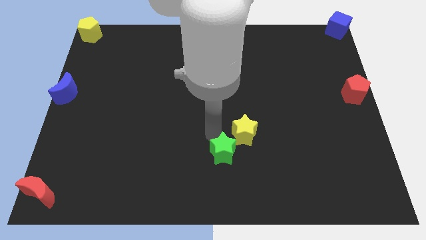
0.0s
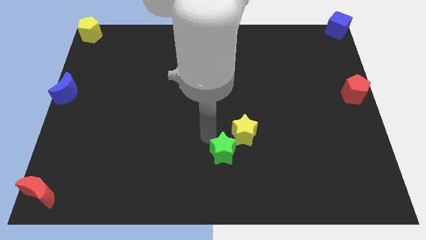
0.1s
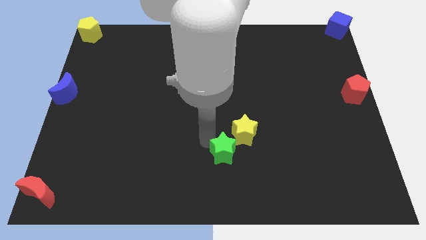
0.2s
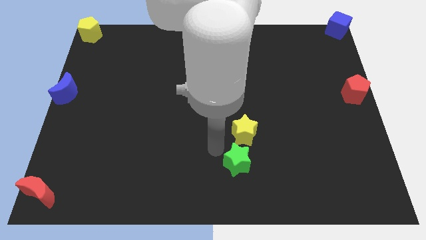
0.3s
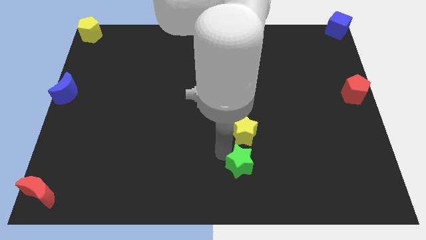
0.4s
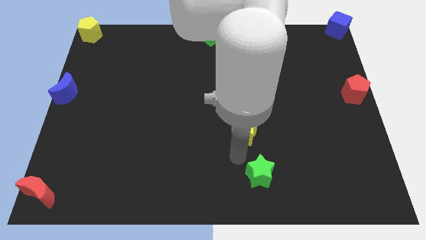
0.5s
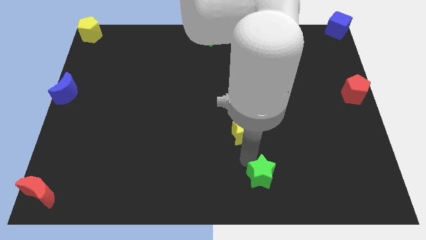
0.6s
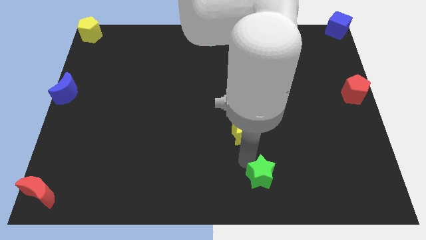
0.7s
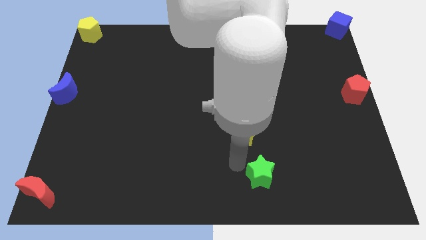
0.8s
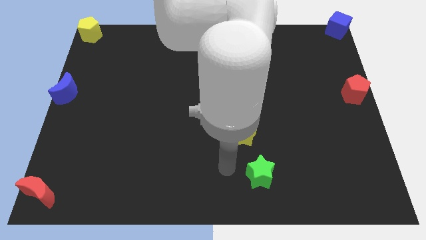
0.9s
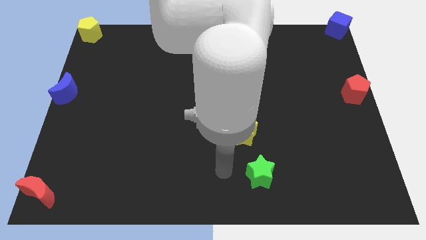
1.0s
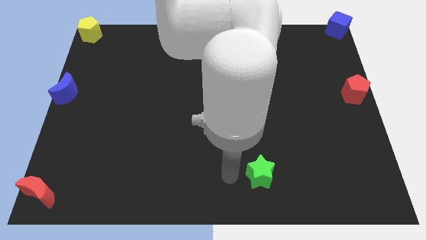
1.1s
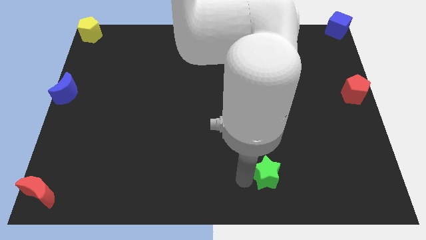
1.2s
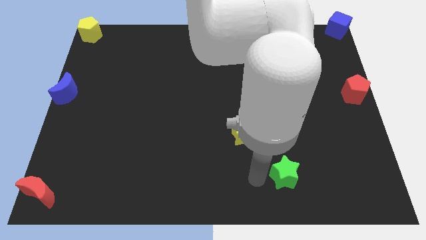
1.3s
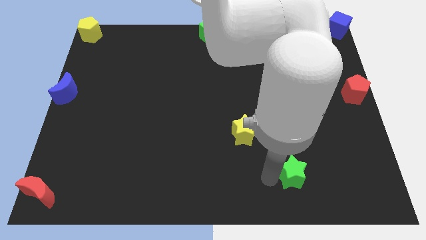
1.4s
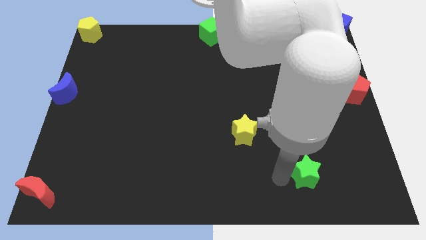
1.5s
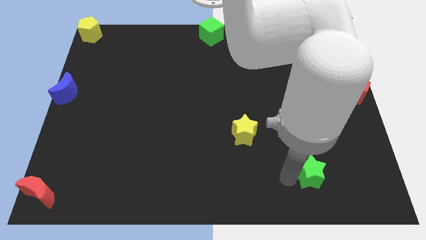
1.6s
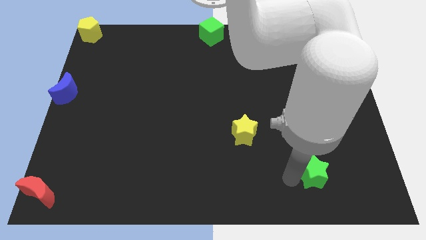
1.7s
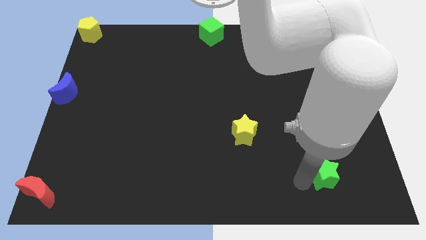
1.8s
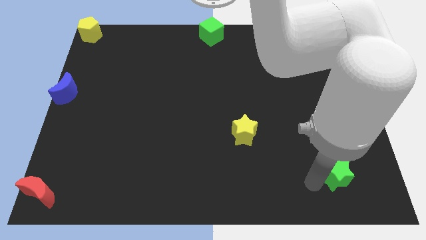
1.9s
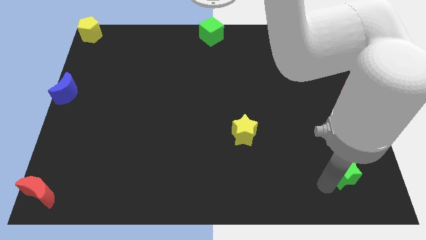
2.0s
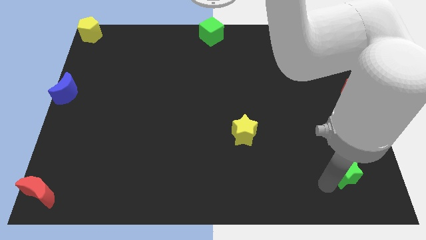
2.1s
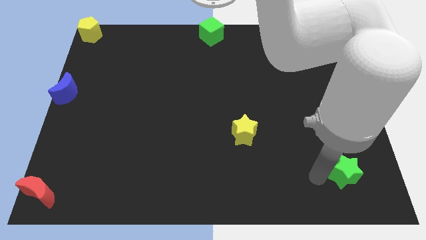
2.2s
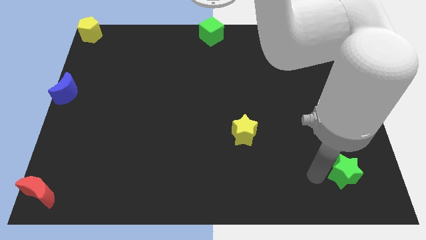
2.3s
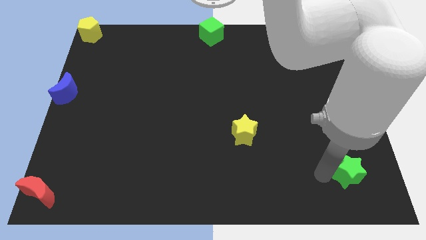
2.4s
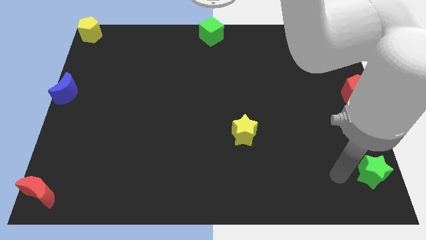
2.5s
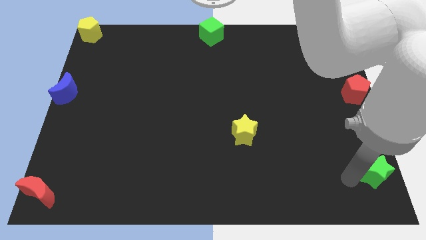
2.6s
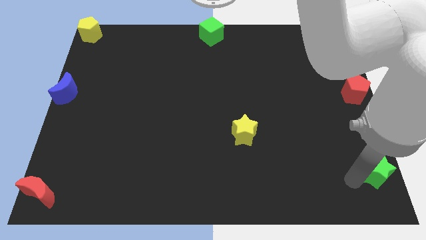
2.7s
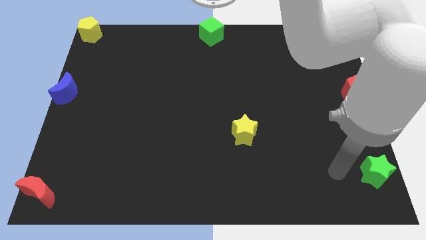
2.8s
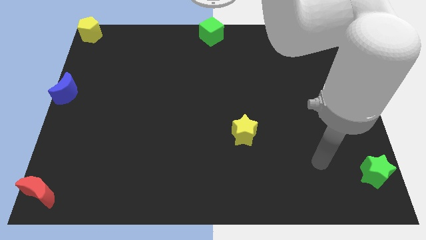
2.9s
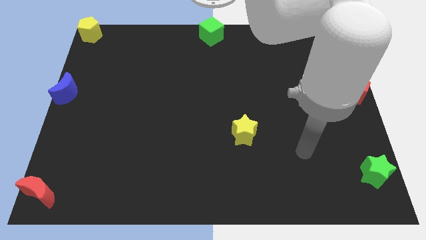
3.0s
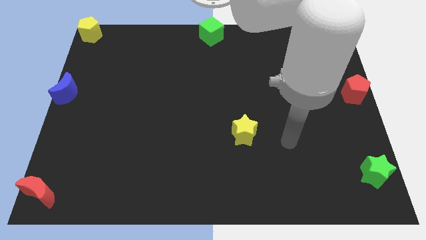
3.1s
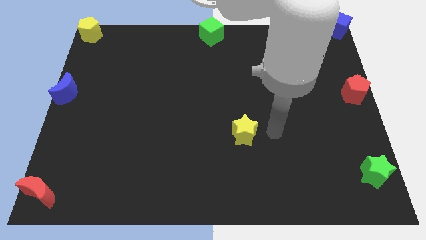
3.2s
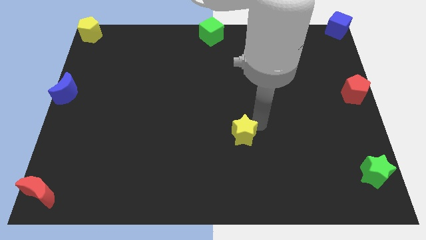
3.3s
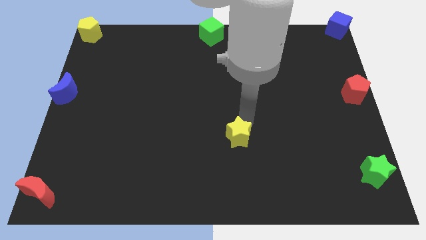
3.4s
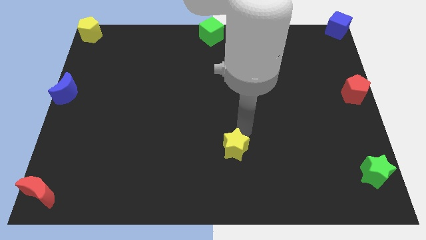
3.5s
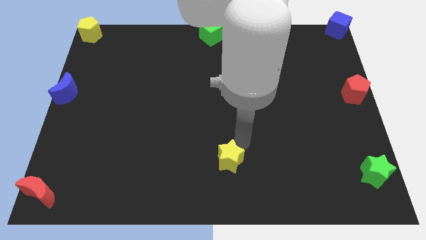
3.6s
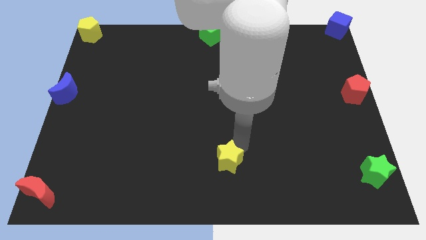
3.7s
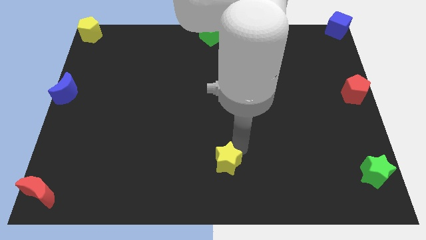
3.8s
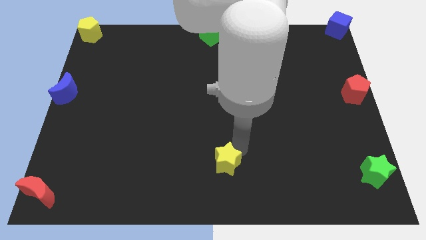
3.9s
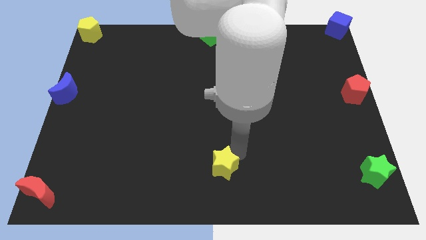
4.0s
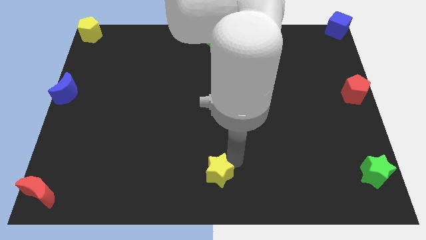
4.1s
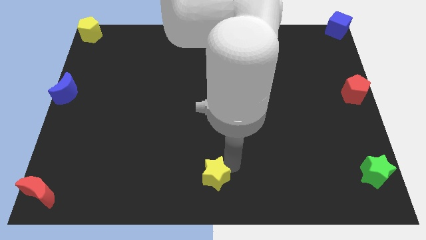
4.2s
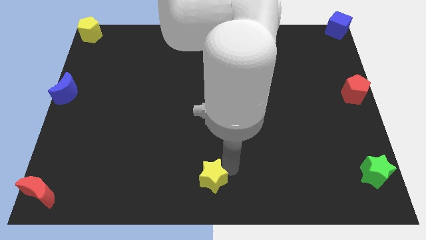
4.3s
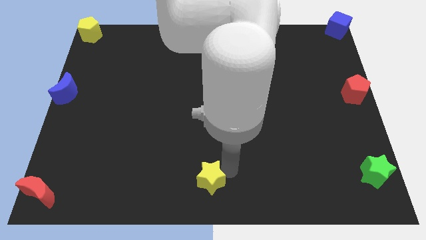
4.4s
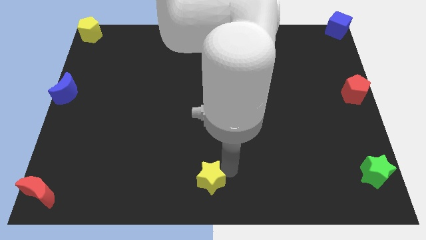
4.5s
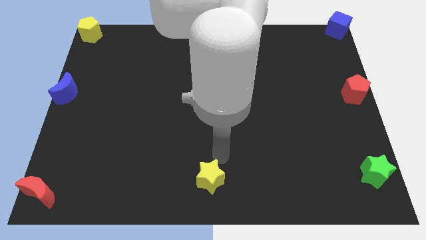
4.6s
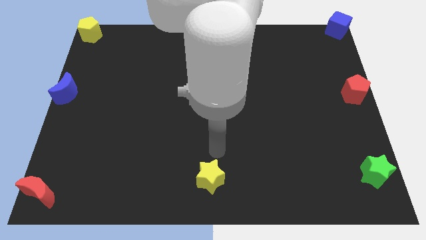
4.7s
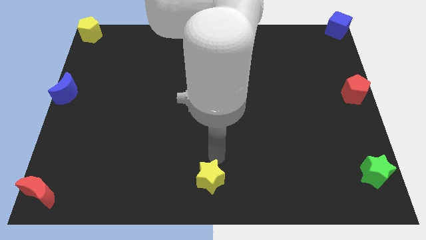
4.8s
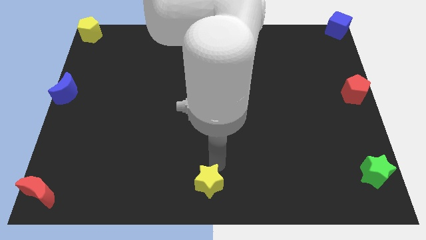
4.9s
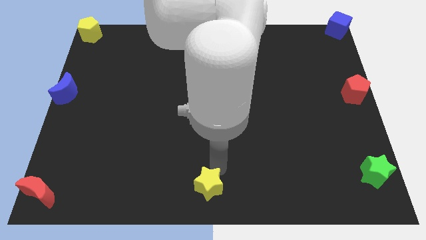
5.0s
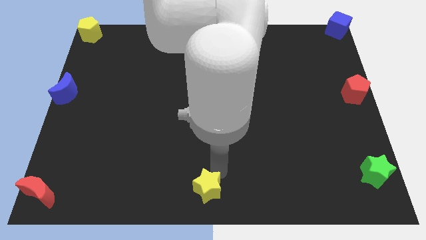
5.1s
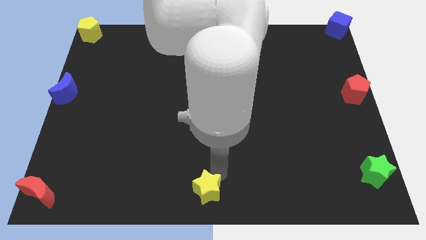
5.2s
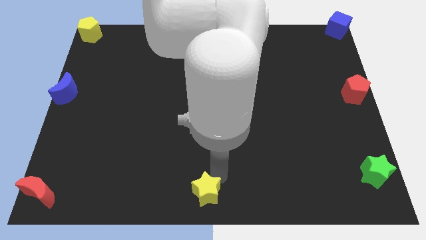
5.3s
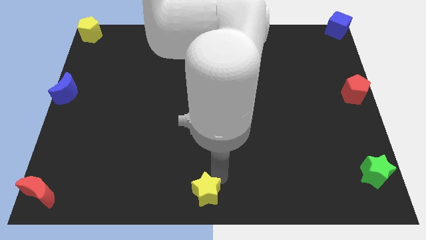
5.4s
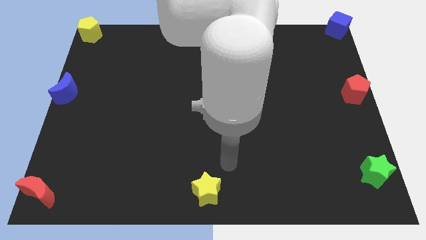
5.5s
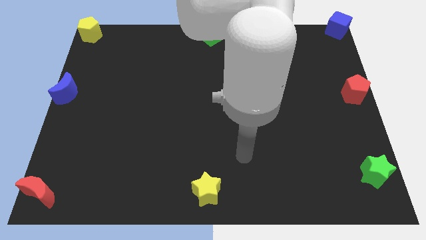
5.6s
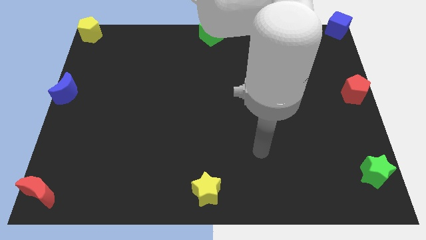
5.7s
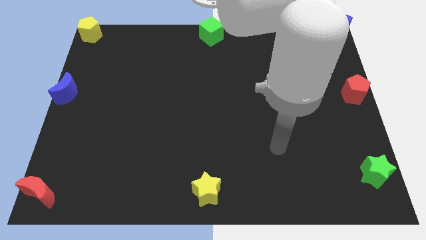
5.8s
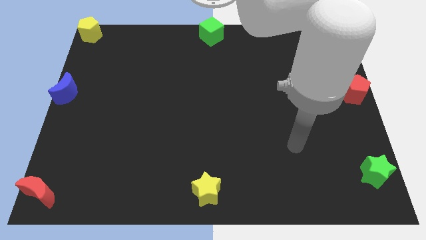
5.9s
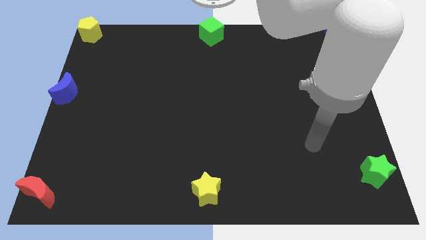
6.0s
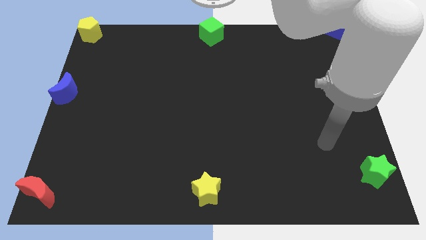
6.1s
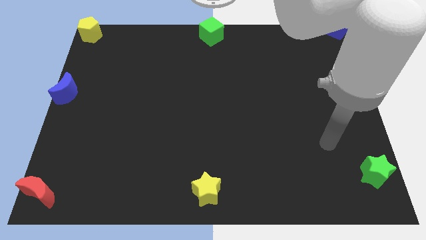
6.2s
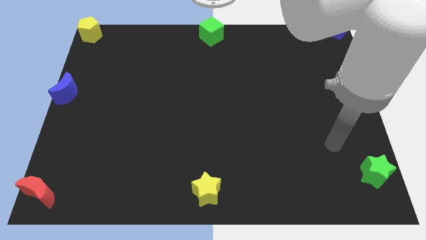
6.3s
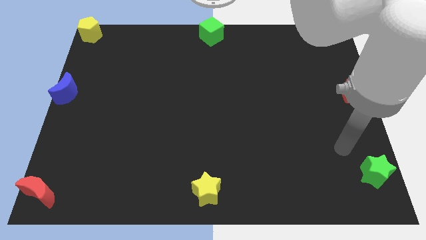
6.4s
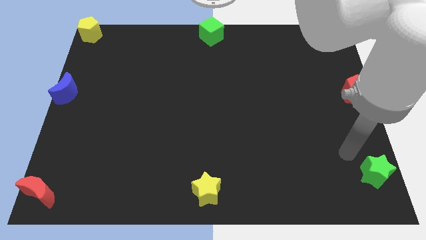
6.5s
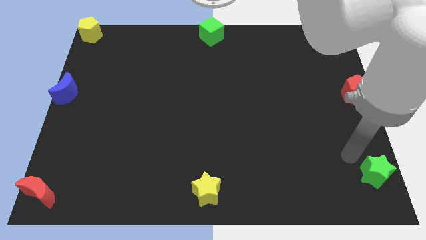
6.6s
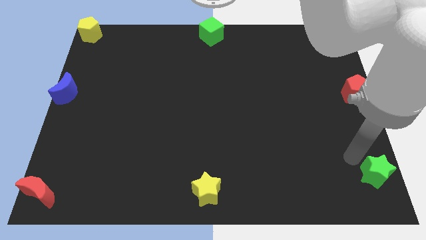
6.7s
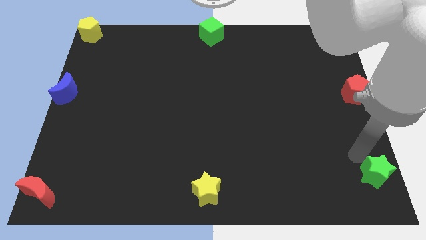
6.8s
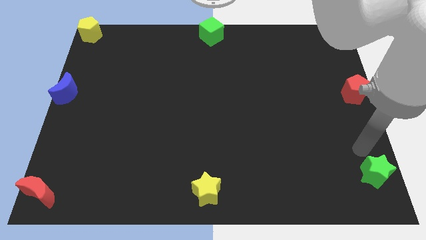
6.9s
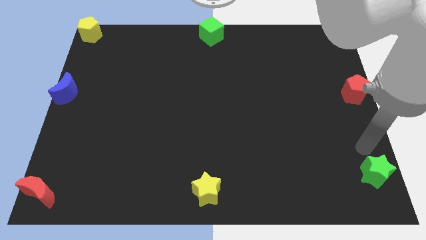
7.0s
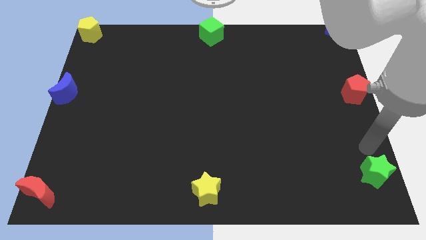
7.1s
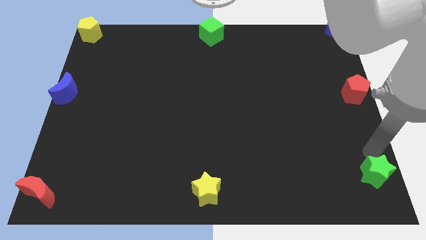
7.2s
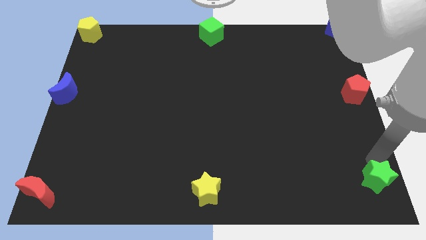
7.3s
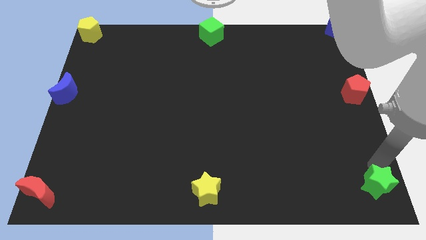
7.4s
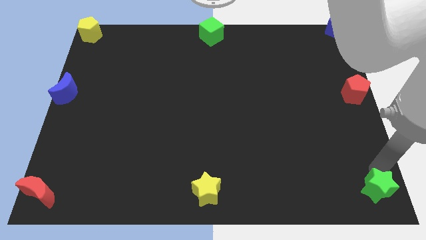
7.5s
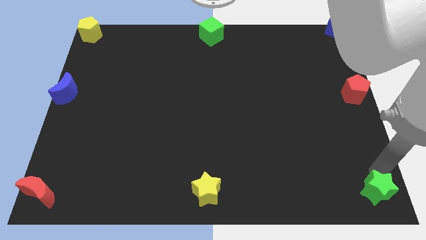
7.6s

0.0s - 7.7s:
place the green star to bottom right corner of the board

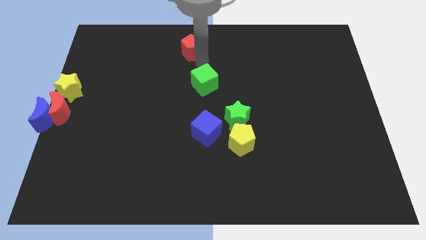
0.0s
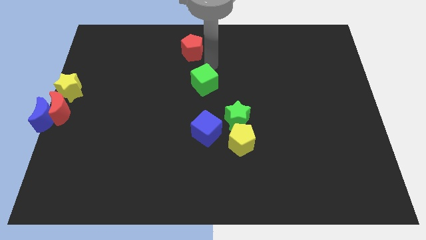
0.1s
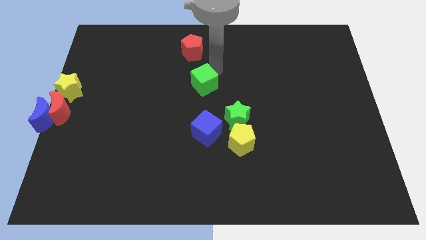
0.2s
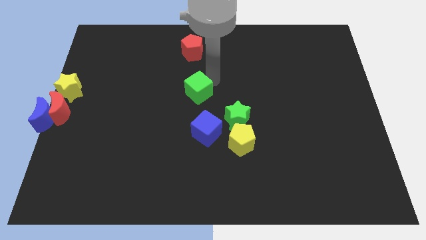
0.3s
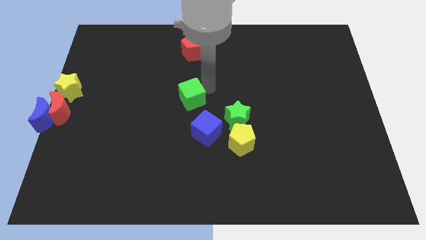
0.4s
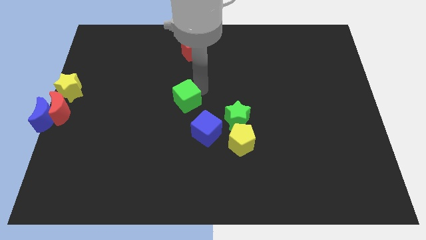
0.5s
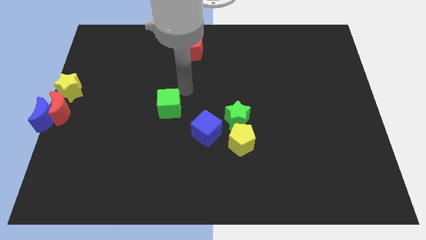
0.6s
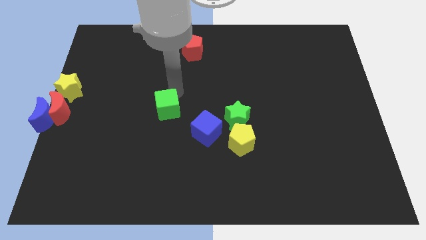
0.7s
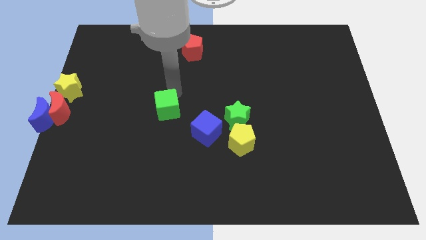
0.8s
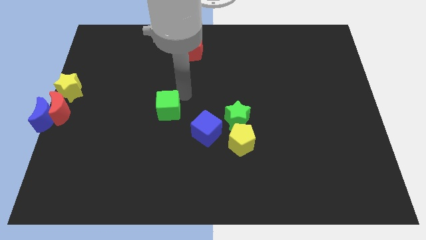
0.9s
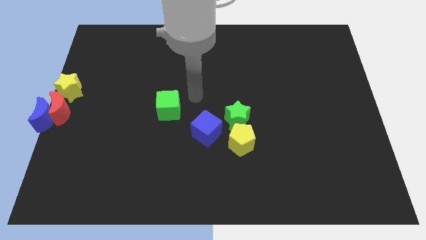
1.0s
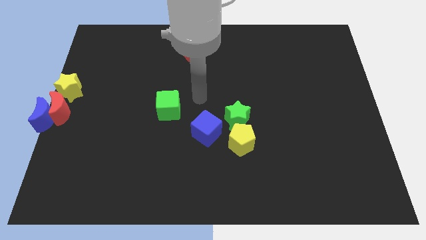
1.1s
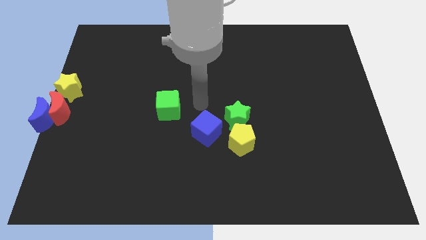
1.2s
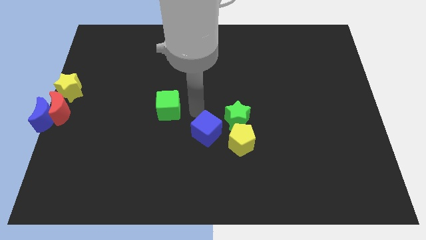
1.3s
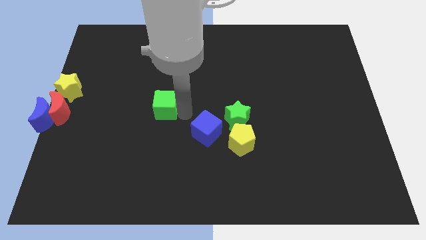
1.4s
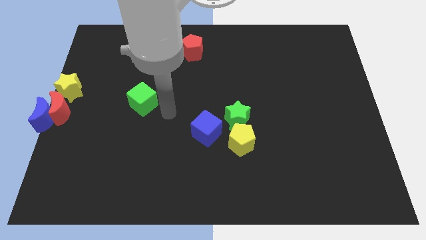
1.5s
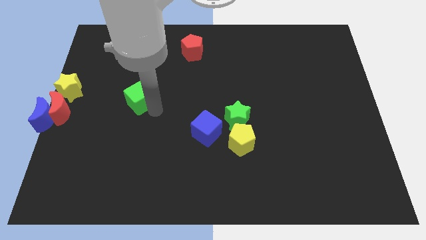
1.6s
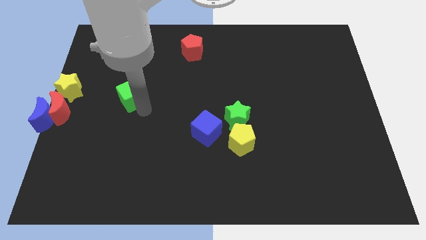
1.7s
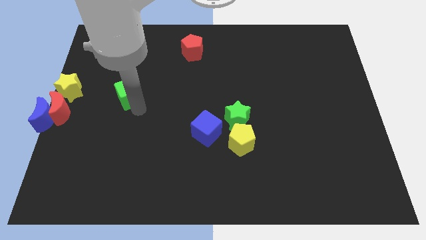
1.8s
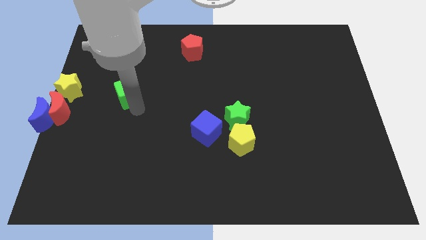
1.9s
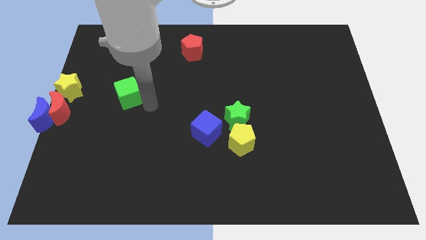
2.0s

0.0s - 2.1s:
move the green cube diagonal to the right of the yellow star
